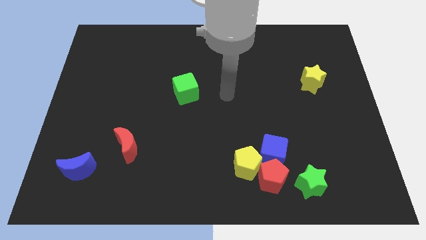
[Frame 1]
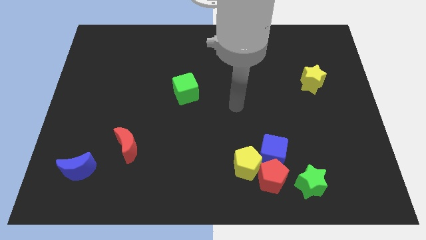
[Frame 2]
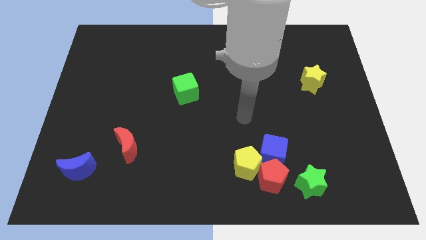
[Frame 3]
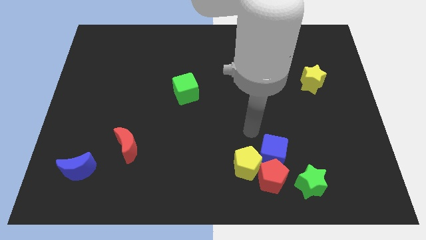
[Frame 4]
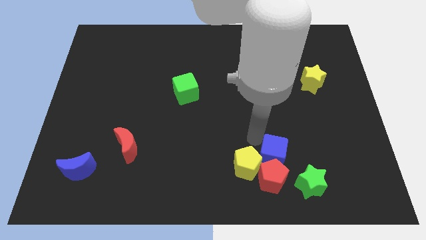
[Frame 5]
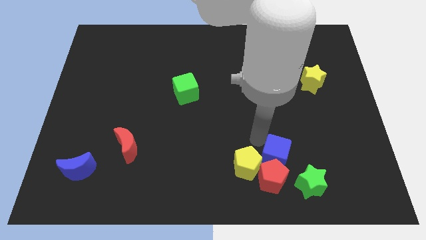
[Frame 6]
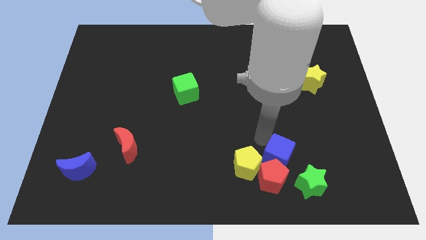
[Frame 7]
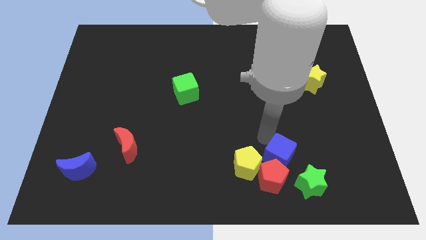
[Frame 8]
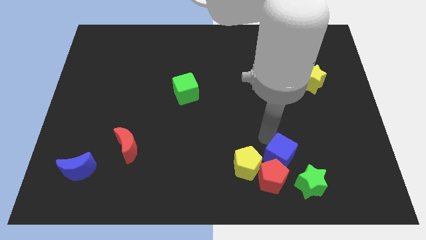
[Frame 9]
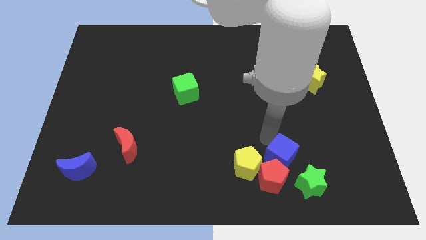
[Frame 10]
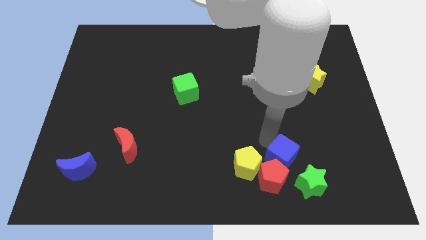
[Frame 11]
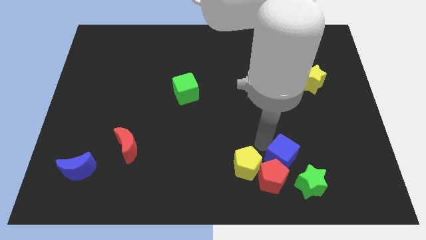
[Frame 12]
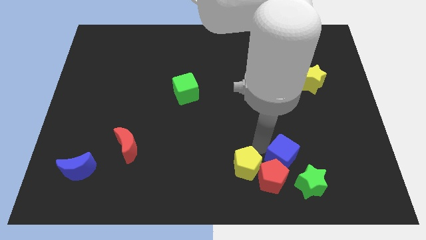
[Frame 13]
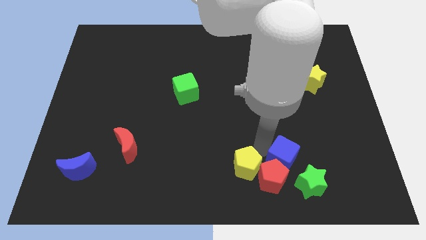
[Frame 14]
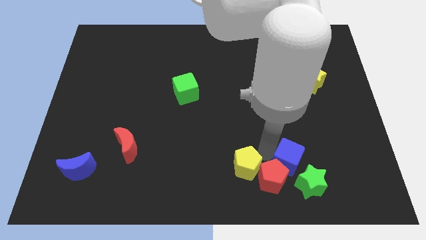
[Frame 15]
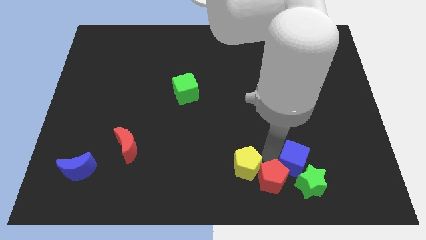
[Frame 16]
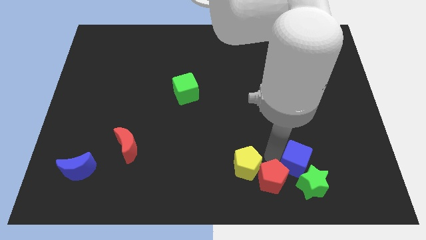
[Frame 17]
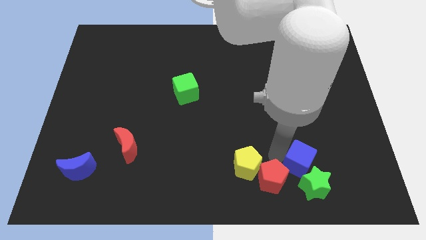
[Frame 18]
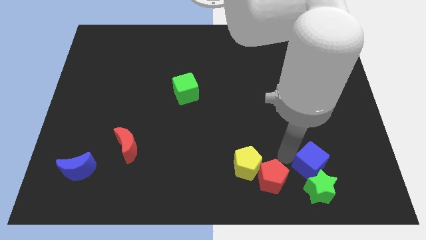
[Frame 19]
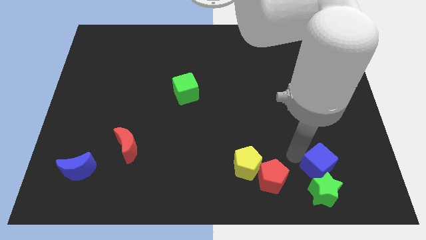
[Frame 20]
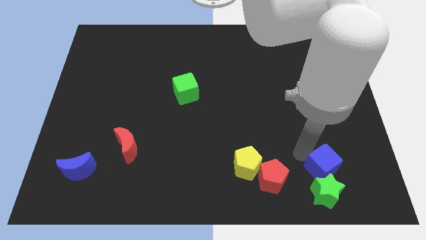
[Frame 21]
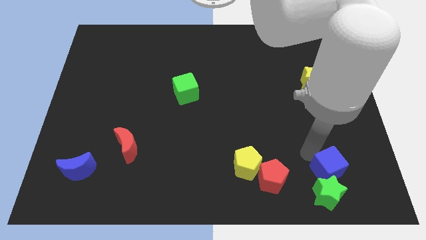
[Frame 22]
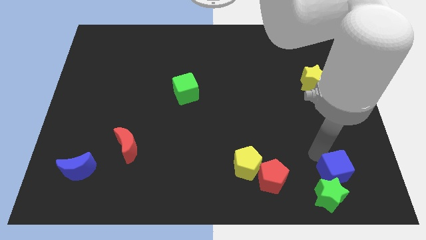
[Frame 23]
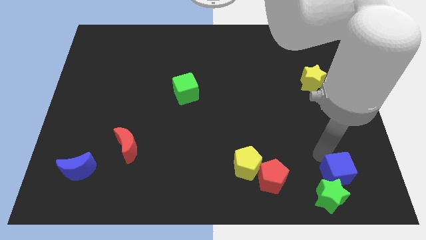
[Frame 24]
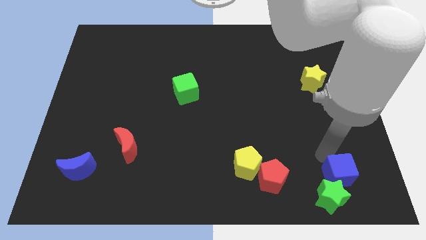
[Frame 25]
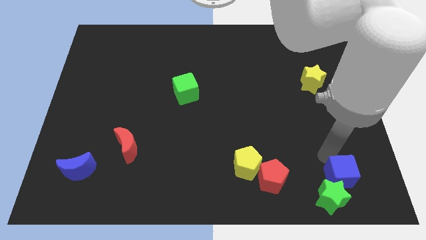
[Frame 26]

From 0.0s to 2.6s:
push the blue cube to the top of the green star

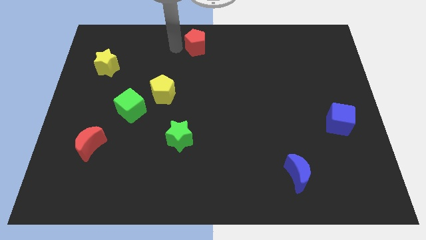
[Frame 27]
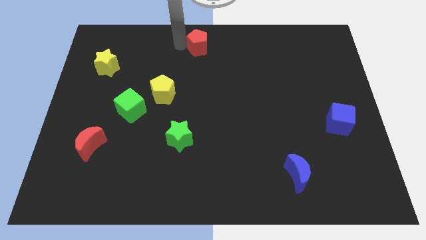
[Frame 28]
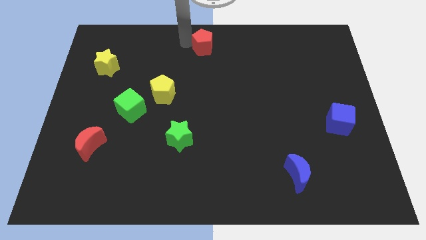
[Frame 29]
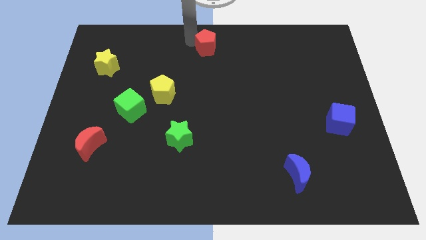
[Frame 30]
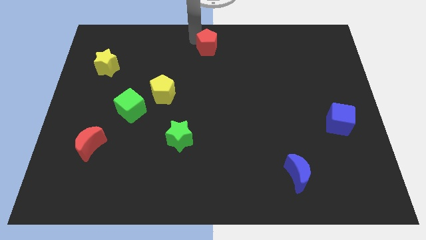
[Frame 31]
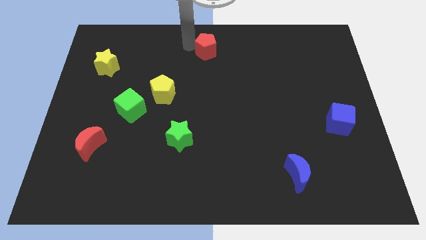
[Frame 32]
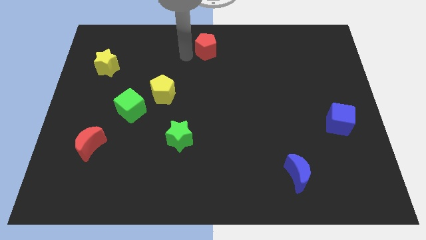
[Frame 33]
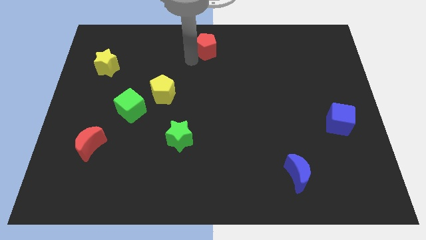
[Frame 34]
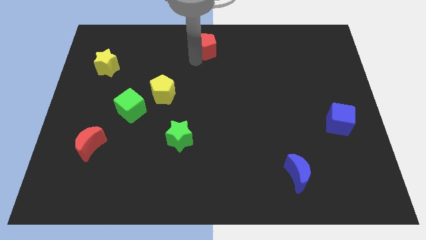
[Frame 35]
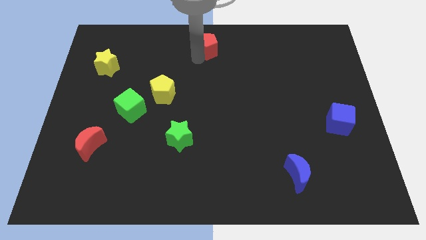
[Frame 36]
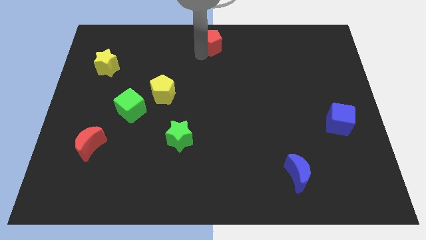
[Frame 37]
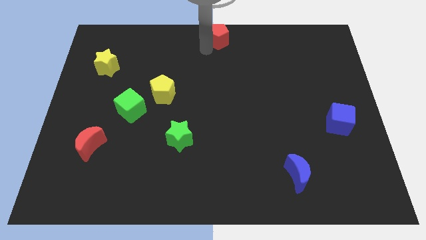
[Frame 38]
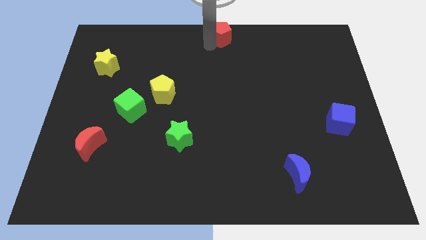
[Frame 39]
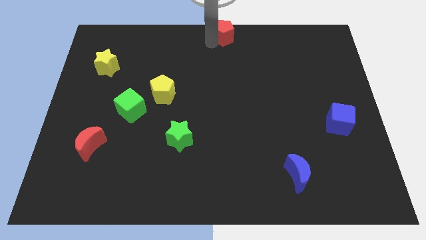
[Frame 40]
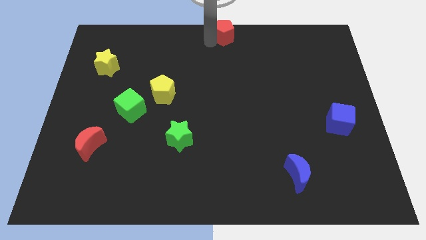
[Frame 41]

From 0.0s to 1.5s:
move the red pentagon to the top center of the board

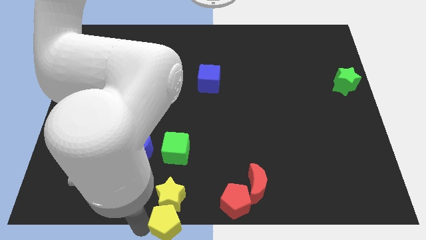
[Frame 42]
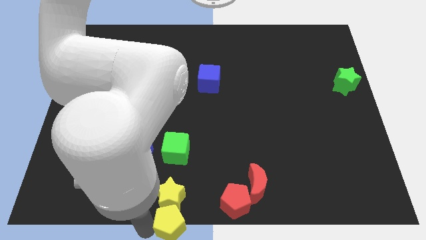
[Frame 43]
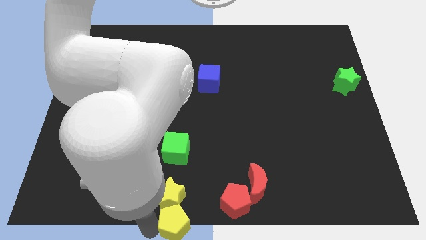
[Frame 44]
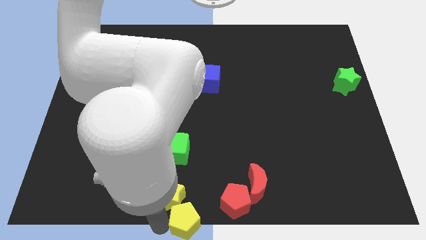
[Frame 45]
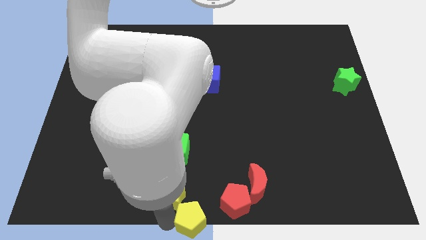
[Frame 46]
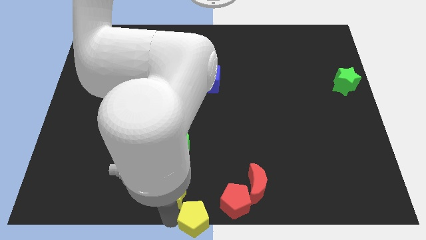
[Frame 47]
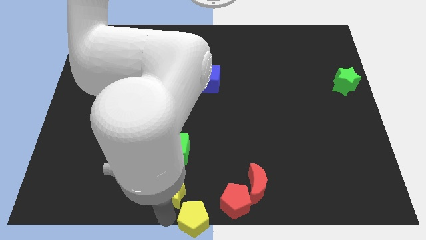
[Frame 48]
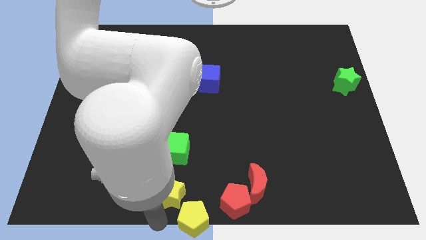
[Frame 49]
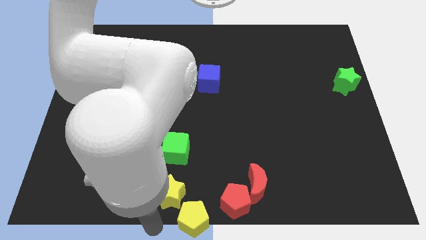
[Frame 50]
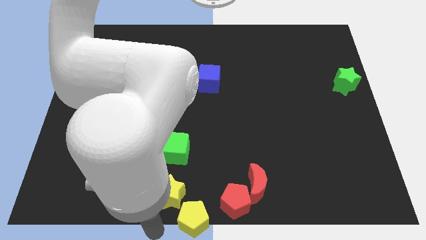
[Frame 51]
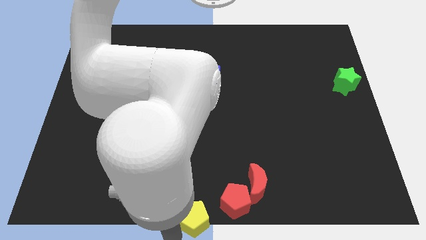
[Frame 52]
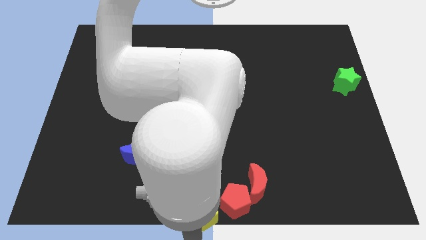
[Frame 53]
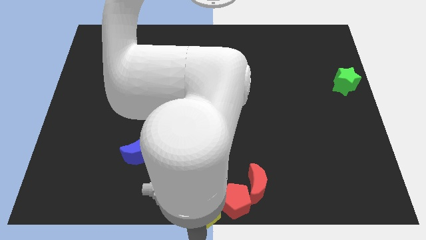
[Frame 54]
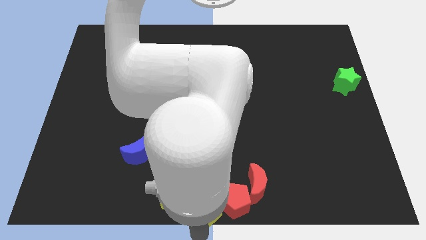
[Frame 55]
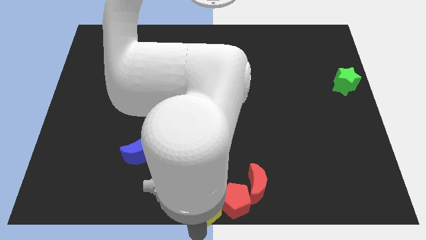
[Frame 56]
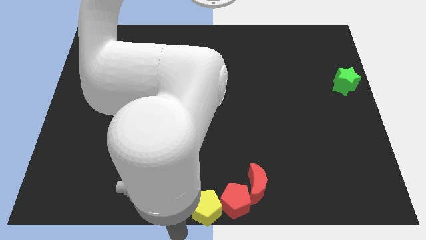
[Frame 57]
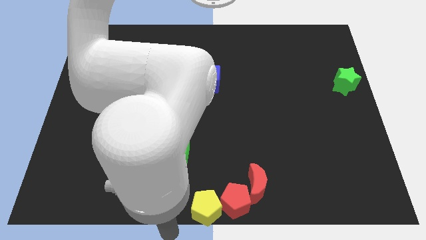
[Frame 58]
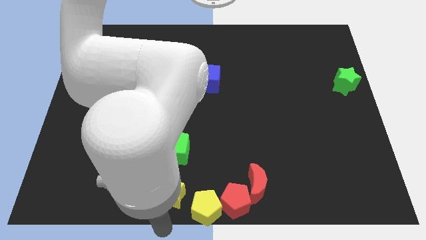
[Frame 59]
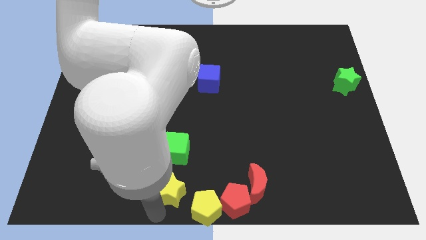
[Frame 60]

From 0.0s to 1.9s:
move the yellow pentagon into the red pentagon

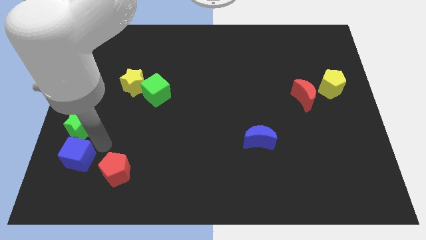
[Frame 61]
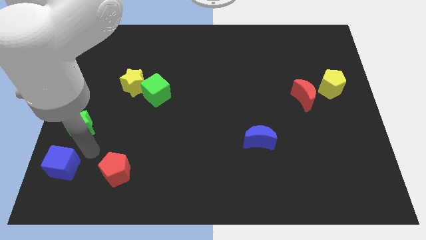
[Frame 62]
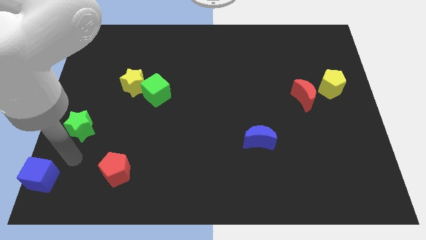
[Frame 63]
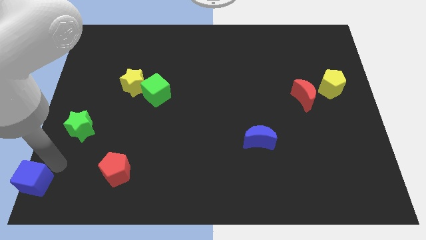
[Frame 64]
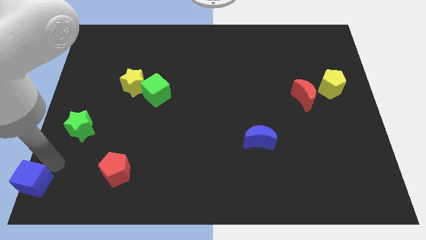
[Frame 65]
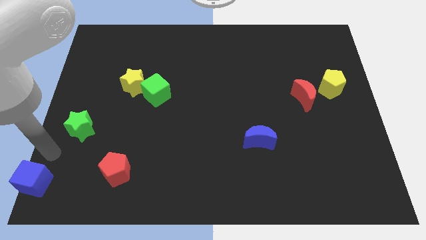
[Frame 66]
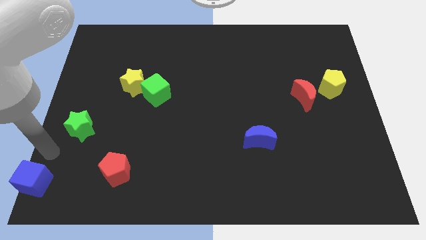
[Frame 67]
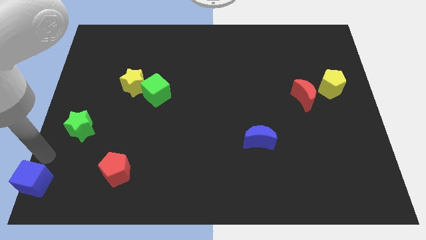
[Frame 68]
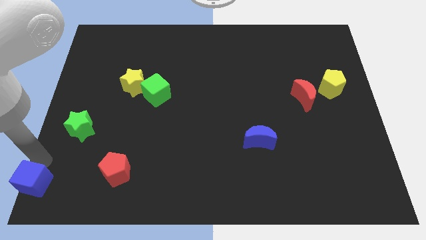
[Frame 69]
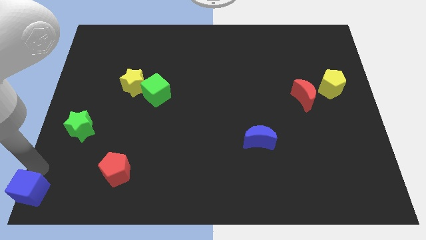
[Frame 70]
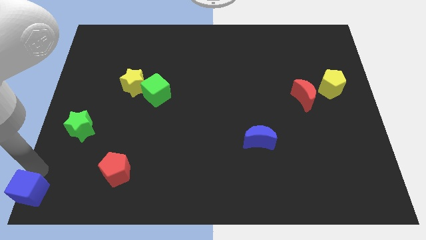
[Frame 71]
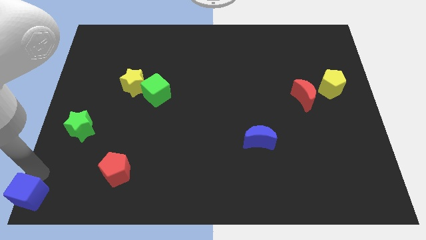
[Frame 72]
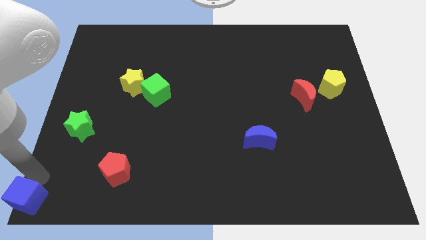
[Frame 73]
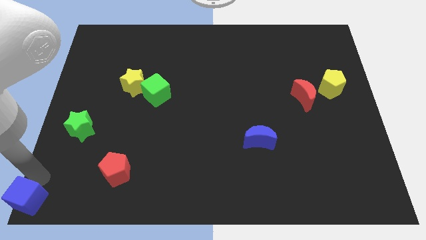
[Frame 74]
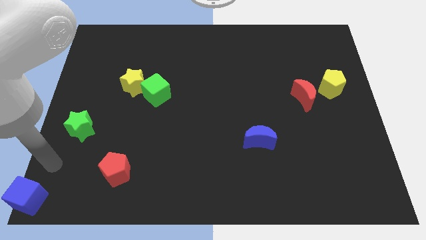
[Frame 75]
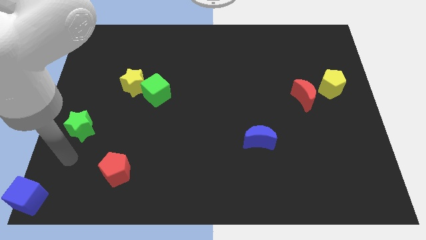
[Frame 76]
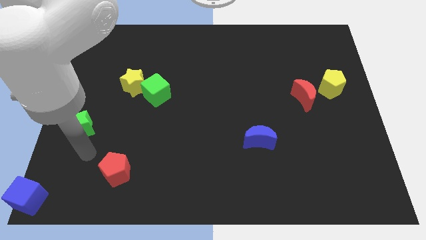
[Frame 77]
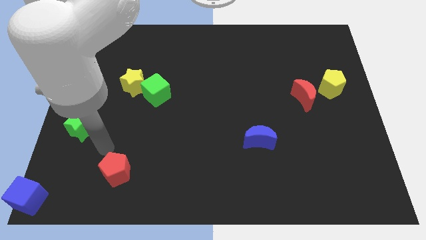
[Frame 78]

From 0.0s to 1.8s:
slide the blue cube to the bottom left corner

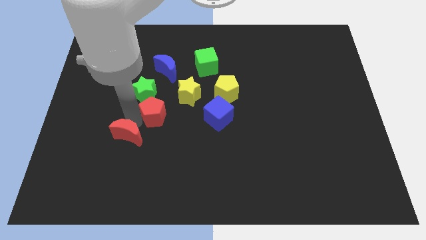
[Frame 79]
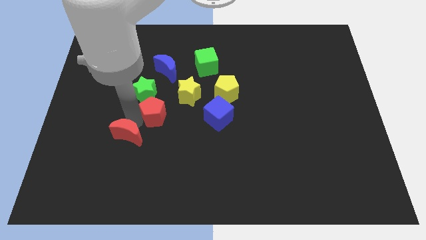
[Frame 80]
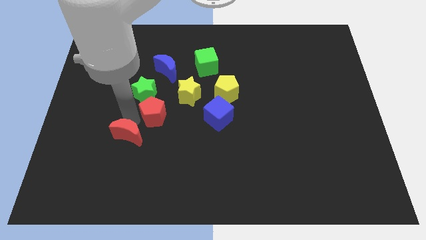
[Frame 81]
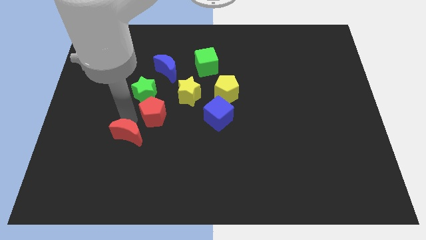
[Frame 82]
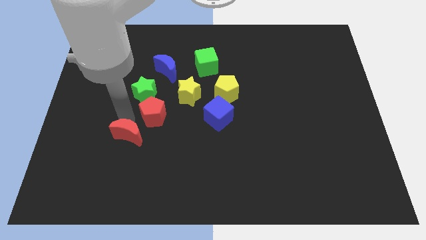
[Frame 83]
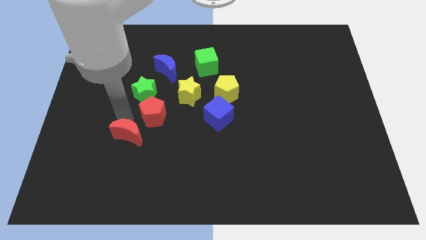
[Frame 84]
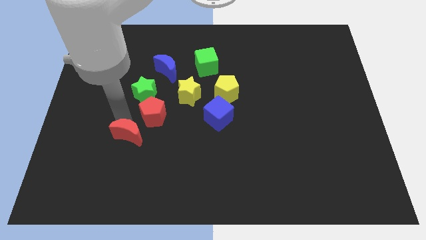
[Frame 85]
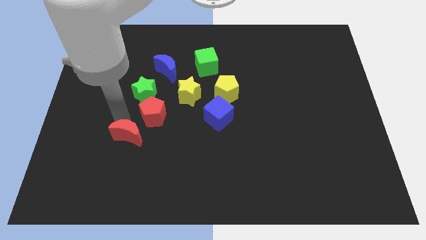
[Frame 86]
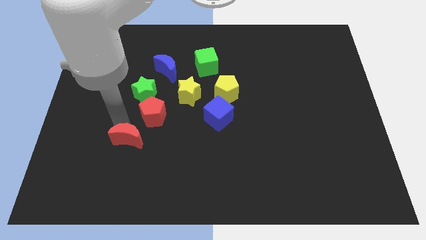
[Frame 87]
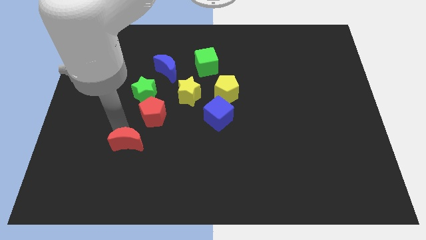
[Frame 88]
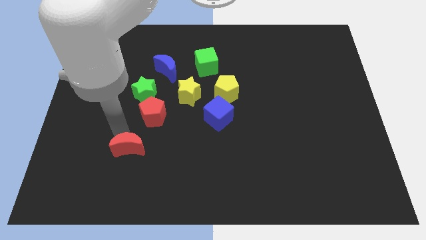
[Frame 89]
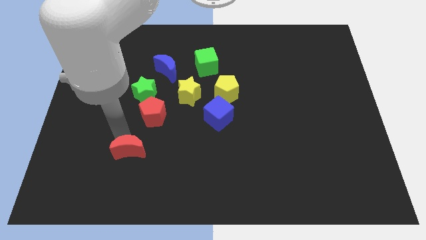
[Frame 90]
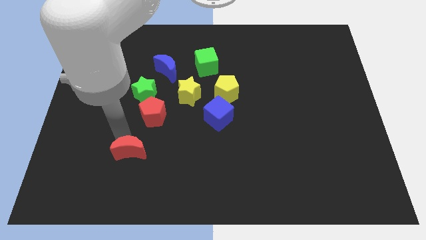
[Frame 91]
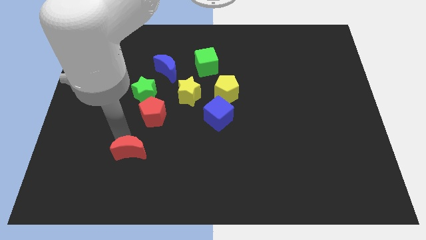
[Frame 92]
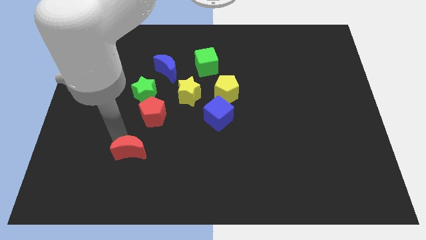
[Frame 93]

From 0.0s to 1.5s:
move the red crescent slightly towards the bottom
